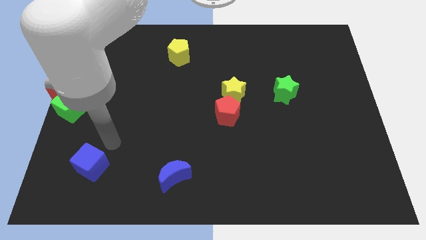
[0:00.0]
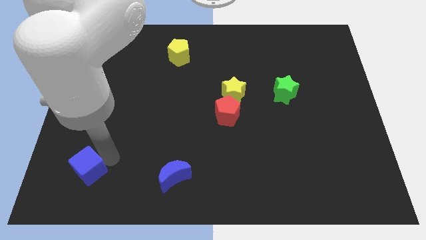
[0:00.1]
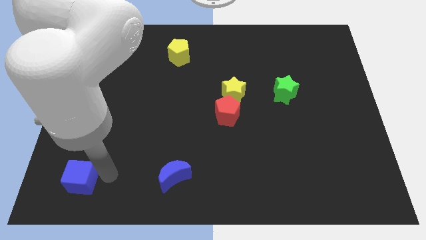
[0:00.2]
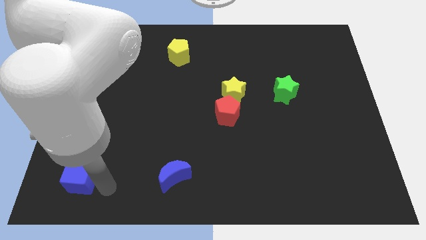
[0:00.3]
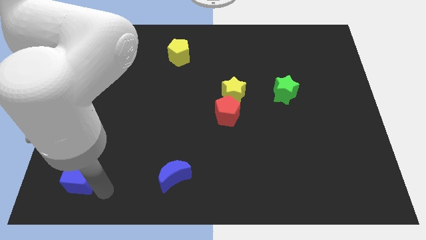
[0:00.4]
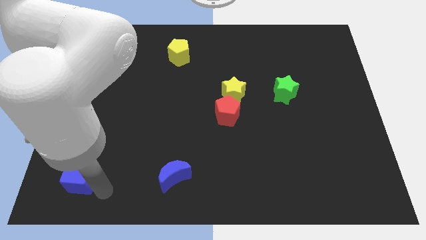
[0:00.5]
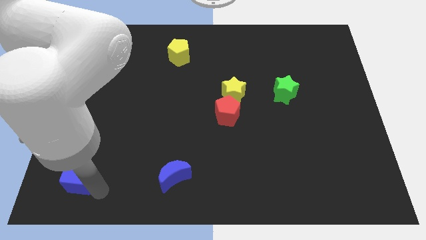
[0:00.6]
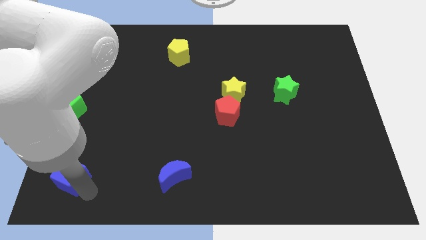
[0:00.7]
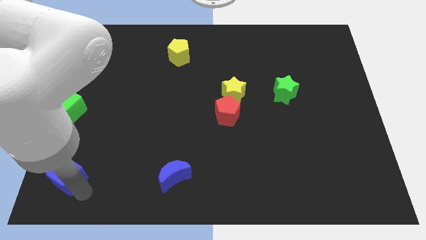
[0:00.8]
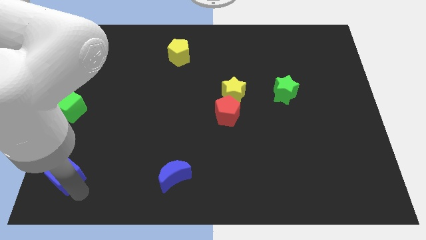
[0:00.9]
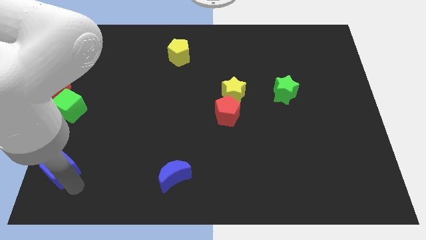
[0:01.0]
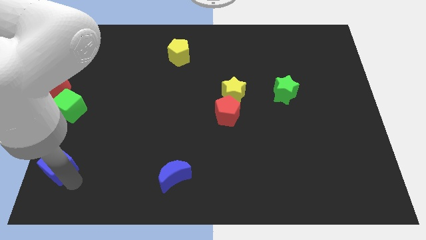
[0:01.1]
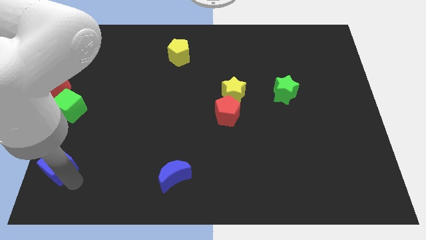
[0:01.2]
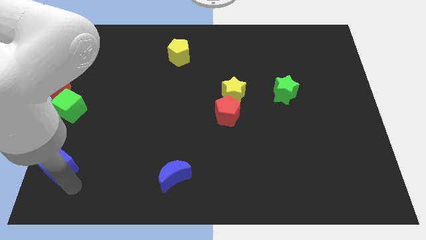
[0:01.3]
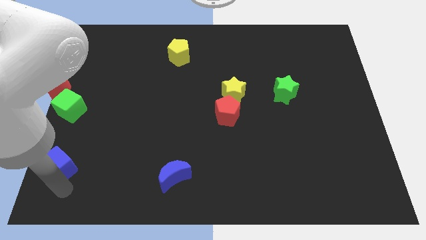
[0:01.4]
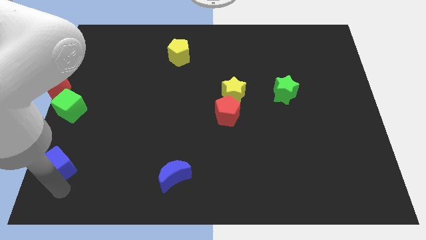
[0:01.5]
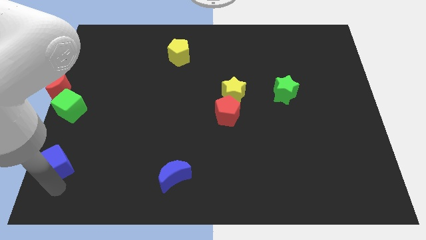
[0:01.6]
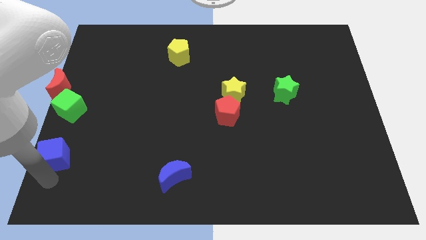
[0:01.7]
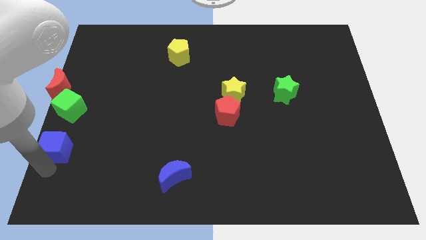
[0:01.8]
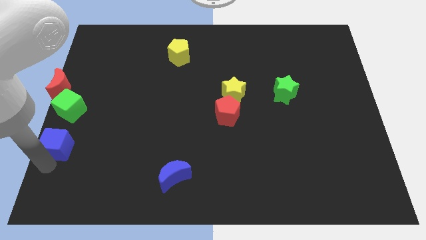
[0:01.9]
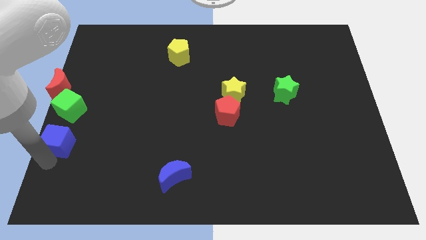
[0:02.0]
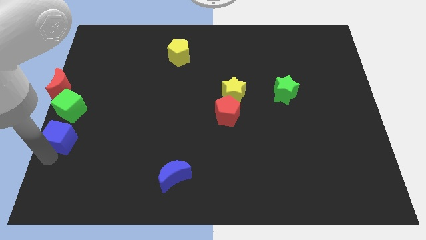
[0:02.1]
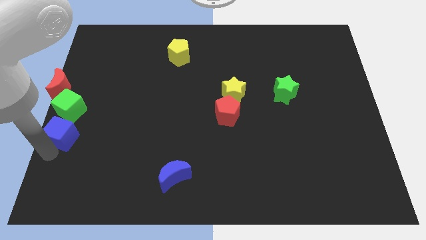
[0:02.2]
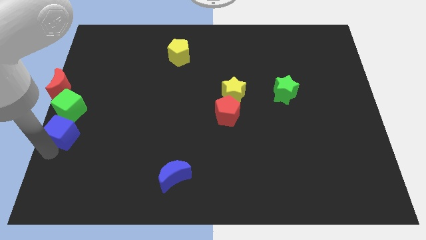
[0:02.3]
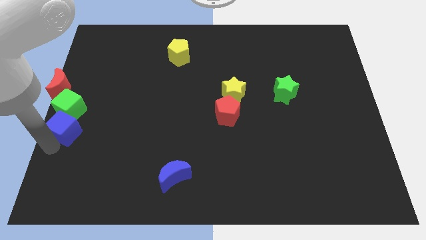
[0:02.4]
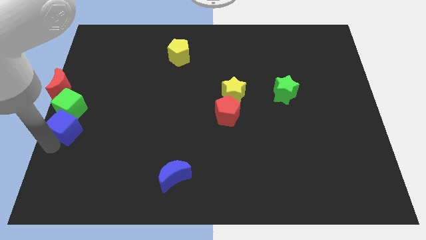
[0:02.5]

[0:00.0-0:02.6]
move the blue cube into the green cube

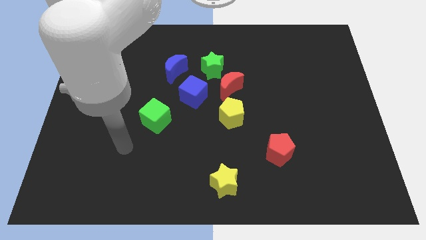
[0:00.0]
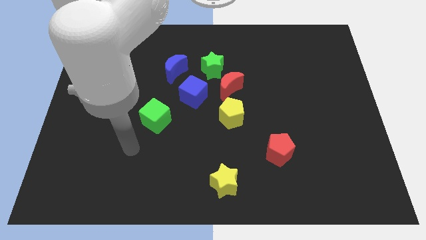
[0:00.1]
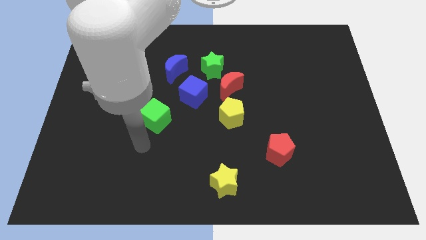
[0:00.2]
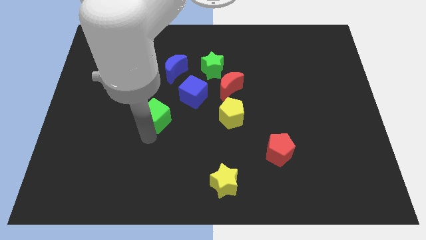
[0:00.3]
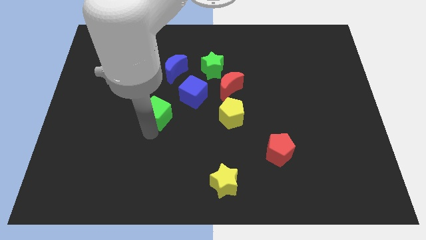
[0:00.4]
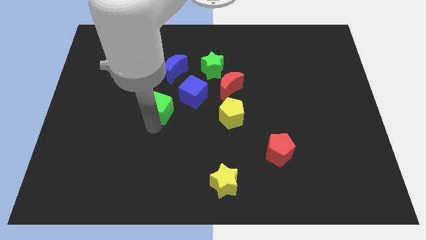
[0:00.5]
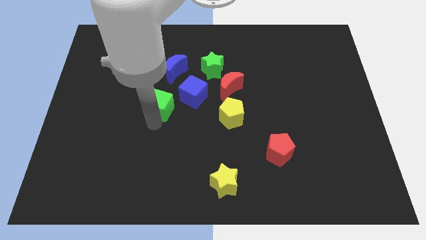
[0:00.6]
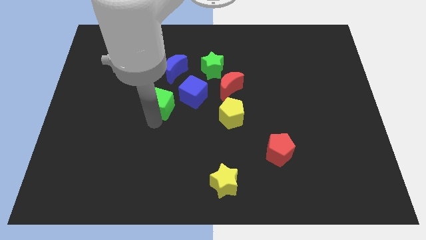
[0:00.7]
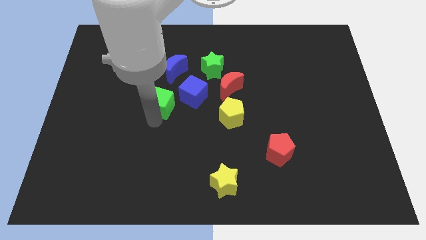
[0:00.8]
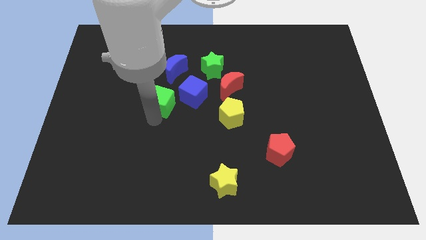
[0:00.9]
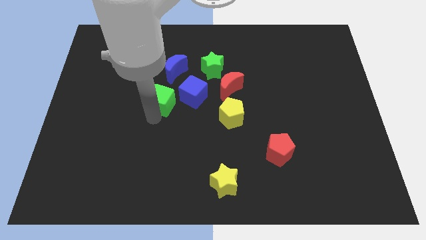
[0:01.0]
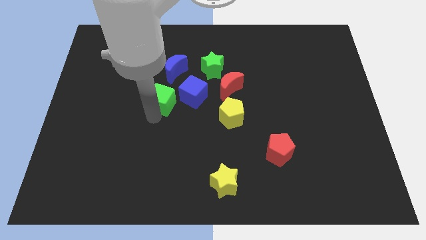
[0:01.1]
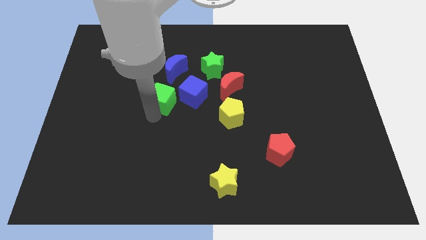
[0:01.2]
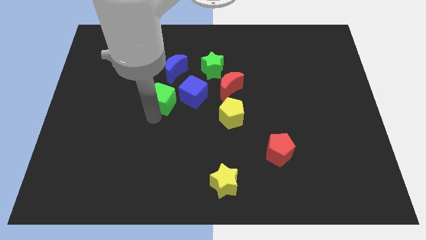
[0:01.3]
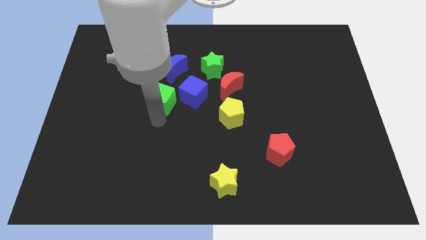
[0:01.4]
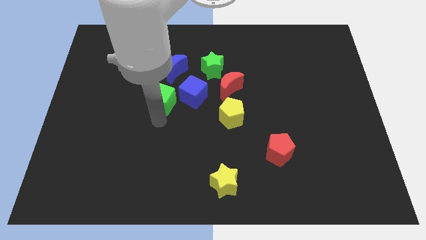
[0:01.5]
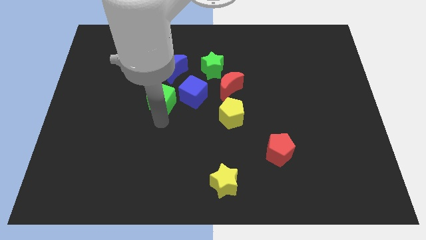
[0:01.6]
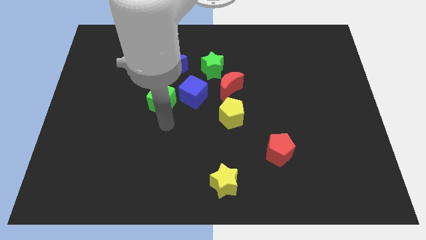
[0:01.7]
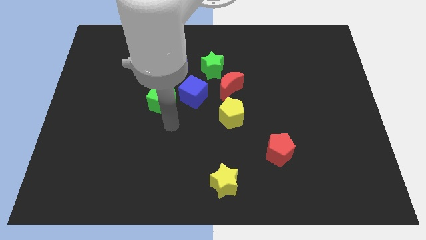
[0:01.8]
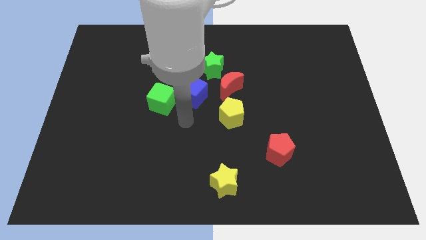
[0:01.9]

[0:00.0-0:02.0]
move the green cube to the left of the blue cube

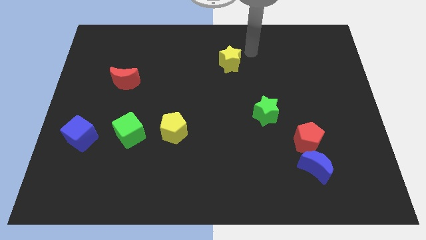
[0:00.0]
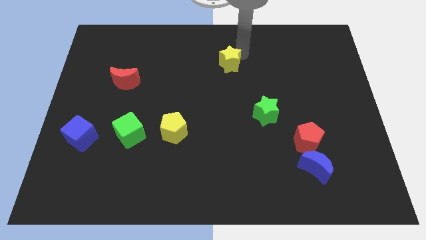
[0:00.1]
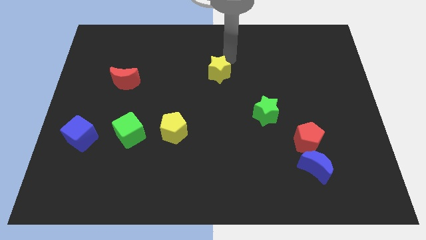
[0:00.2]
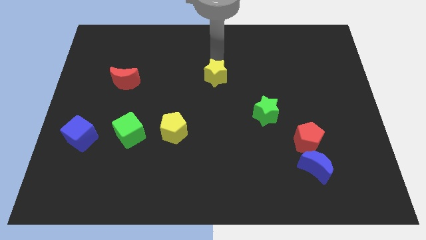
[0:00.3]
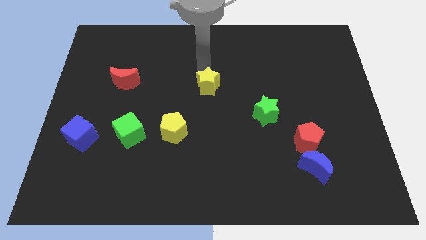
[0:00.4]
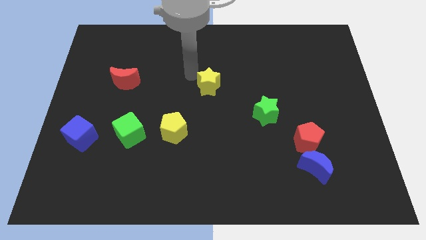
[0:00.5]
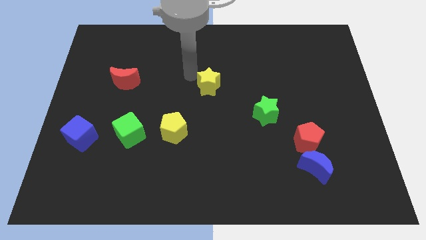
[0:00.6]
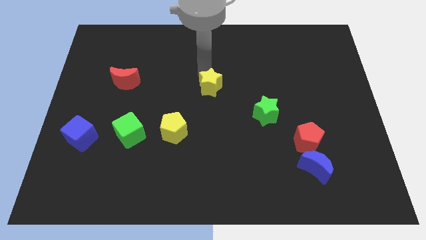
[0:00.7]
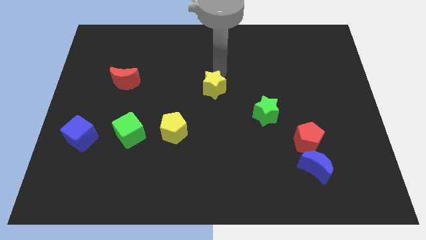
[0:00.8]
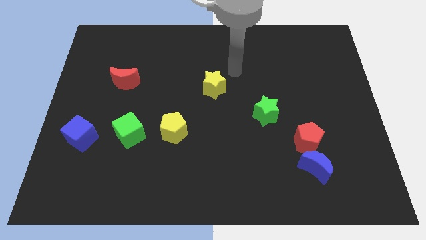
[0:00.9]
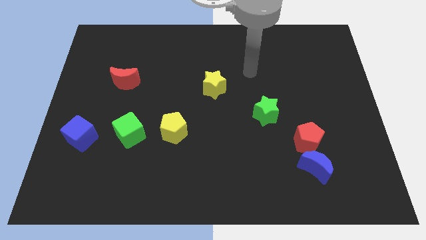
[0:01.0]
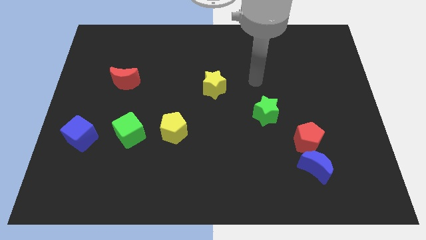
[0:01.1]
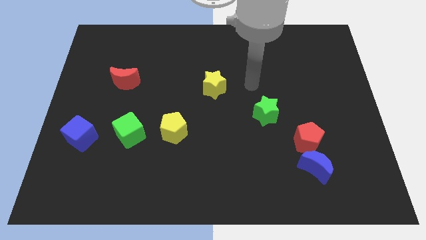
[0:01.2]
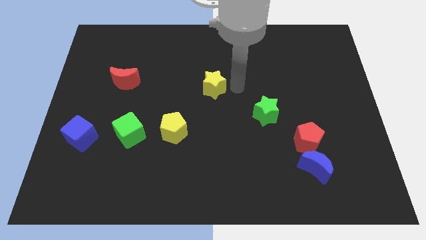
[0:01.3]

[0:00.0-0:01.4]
slightly push the yellow star to the center of the board

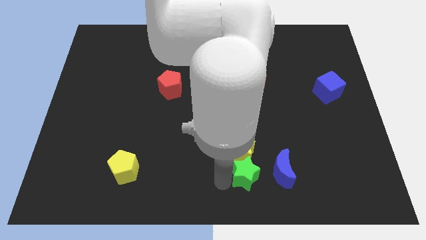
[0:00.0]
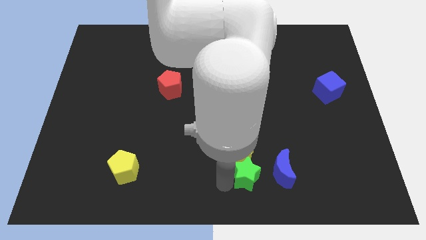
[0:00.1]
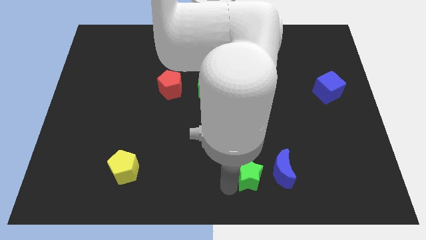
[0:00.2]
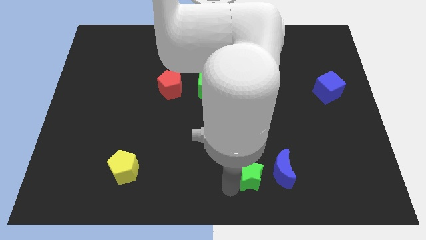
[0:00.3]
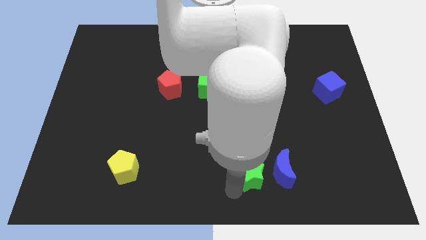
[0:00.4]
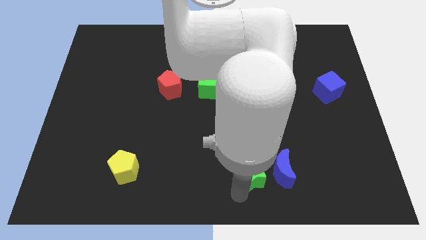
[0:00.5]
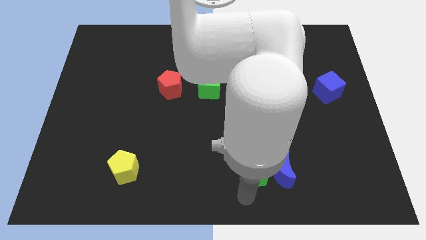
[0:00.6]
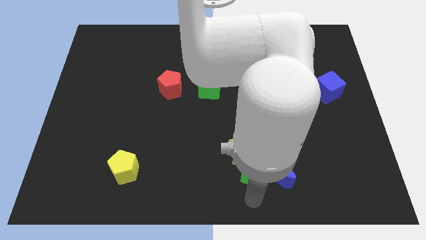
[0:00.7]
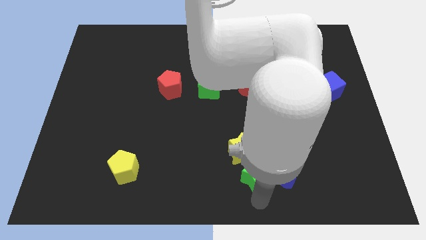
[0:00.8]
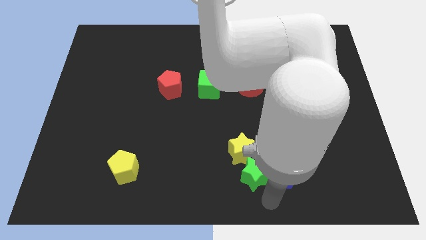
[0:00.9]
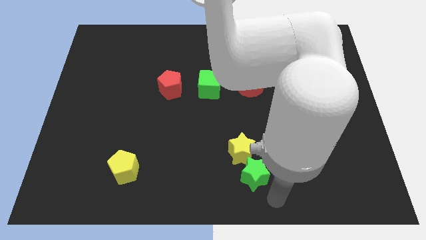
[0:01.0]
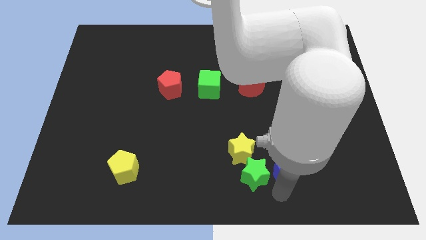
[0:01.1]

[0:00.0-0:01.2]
push green star towards blue moon

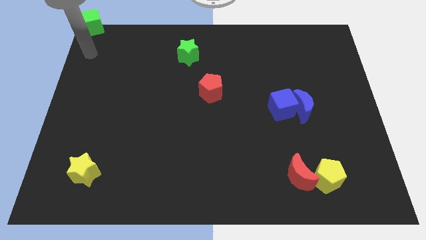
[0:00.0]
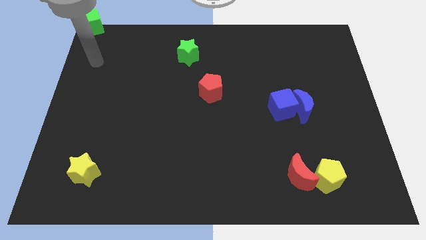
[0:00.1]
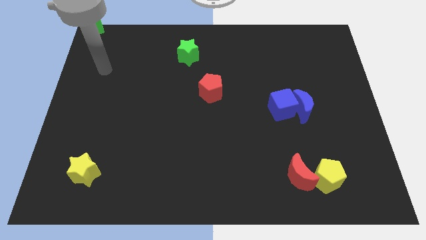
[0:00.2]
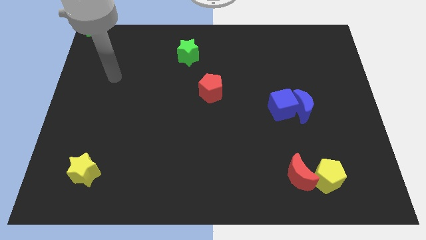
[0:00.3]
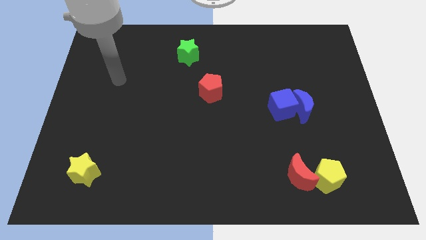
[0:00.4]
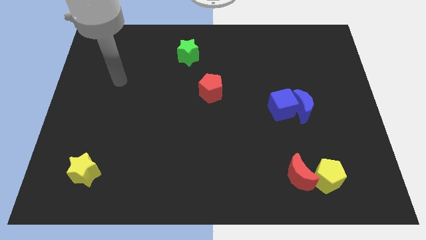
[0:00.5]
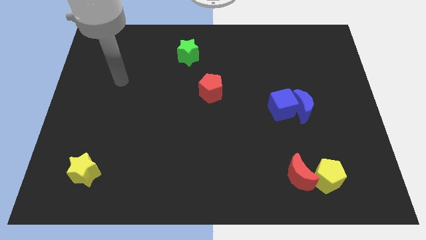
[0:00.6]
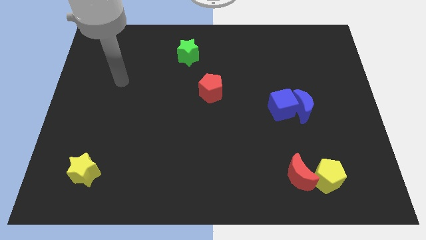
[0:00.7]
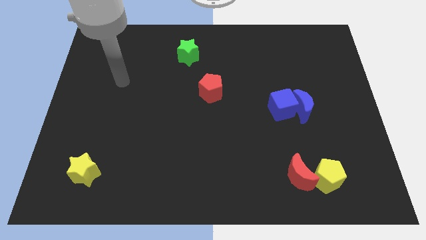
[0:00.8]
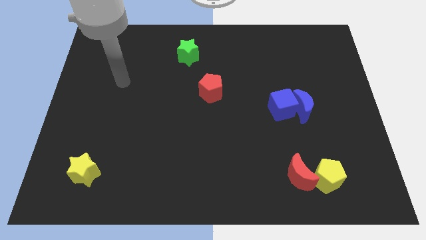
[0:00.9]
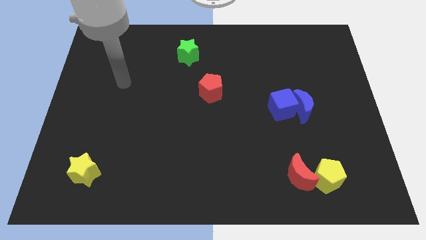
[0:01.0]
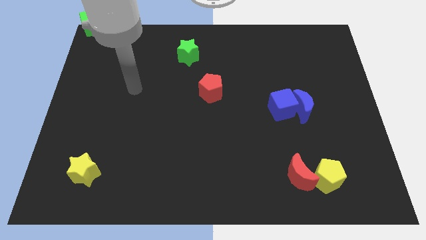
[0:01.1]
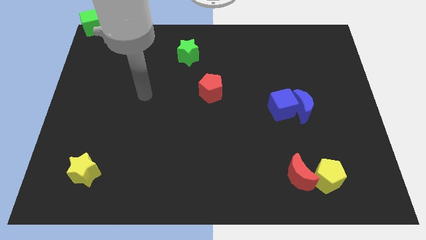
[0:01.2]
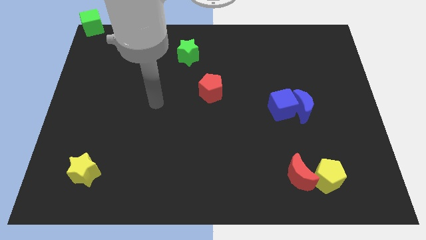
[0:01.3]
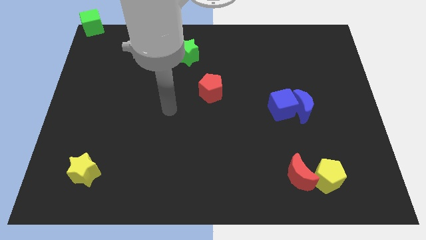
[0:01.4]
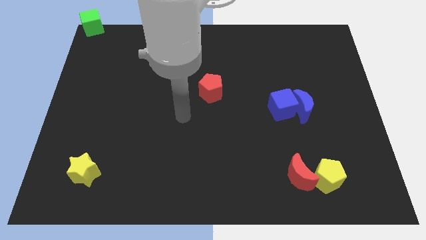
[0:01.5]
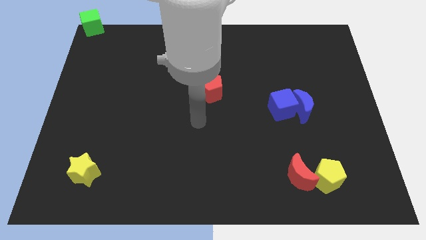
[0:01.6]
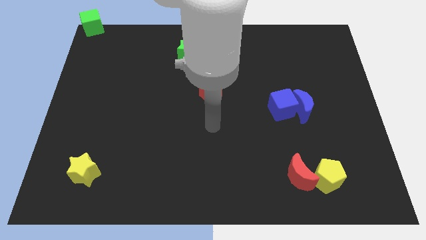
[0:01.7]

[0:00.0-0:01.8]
go to the center of the table
